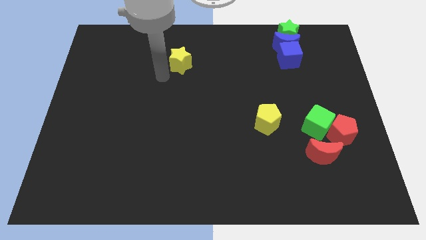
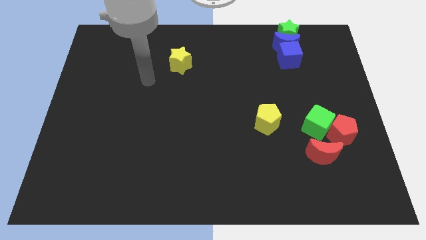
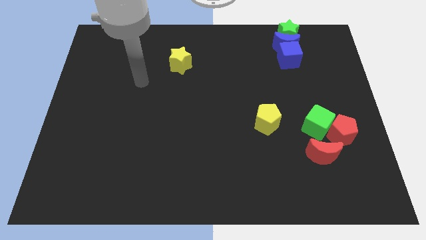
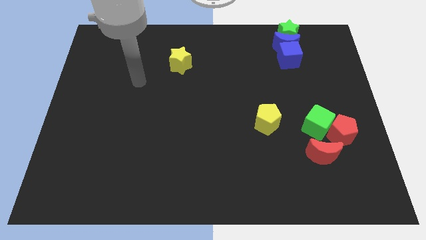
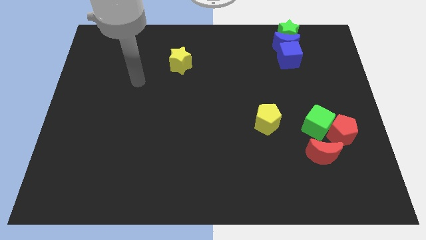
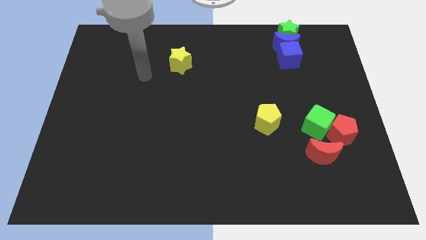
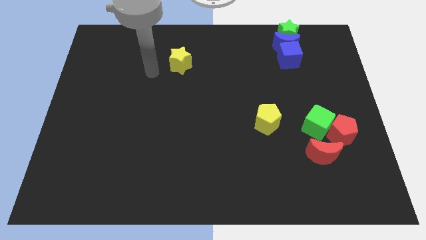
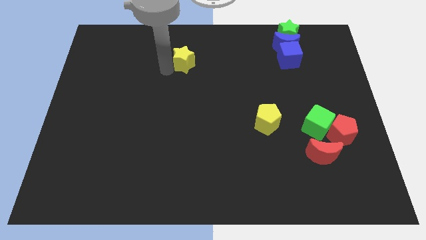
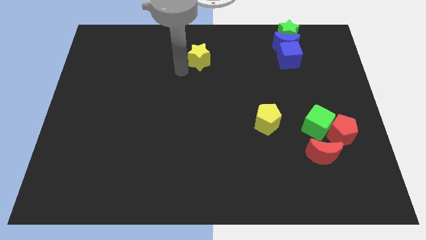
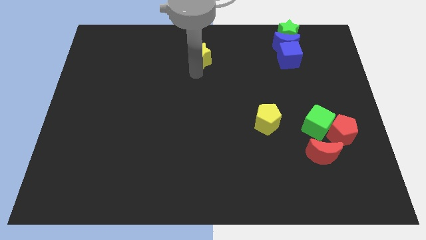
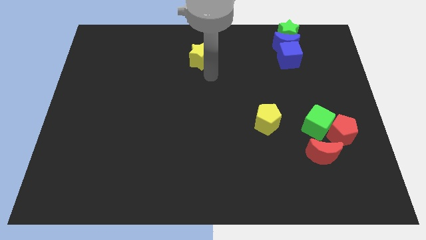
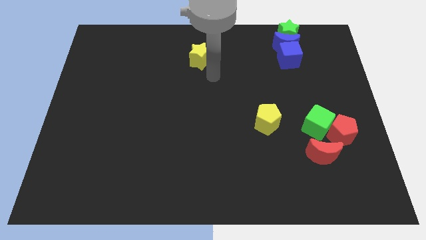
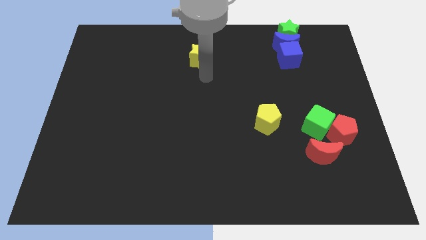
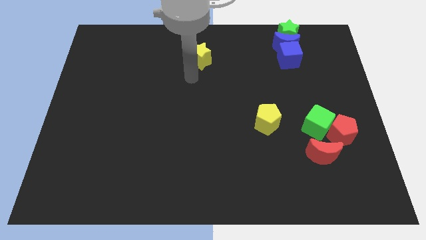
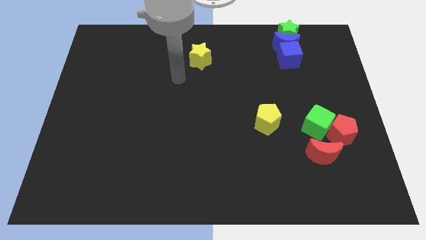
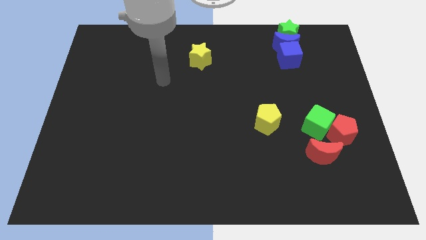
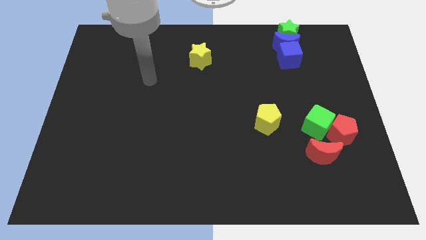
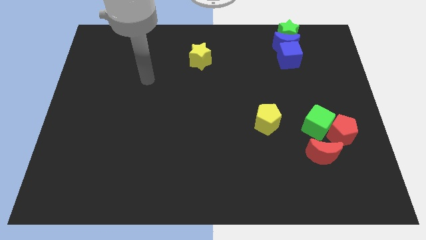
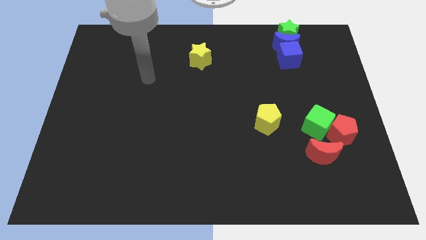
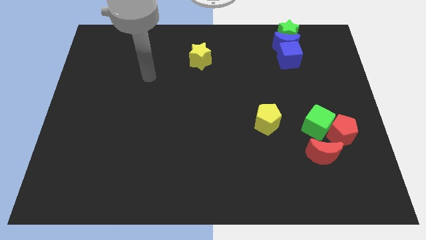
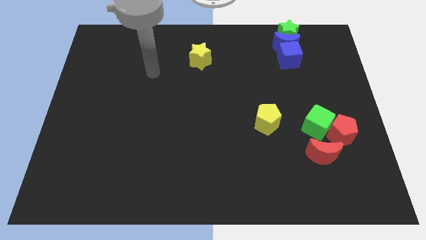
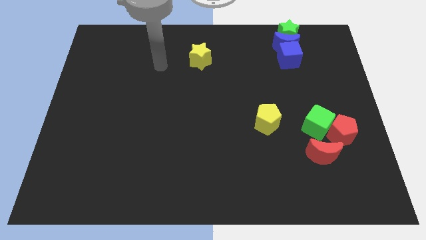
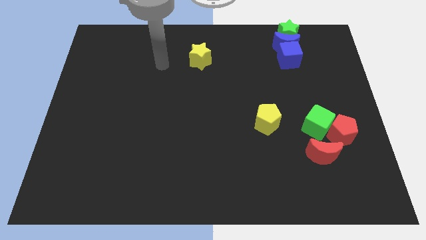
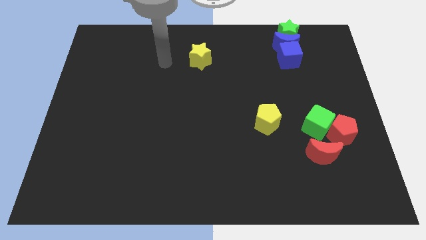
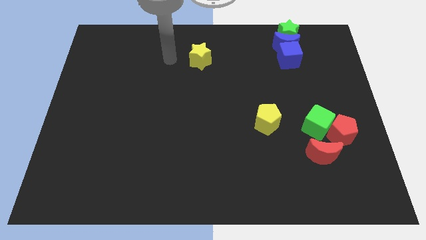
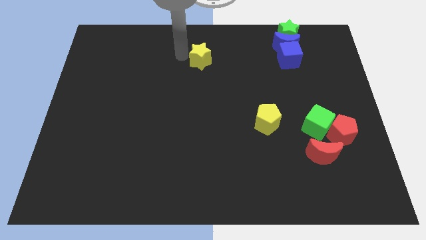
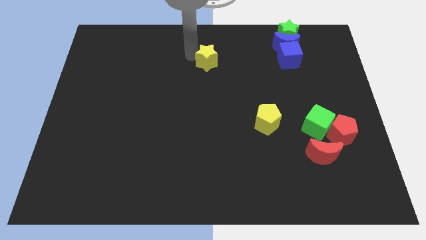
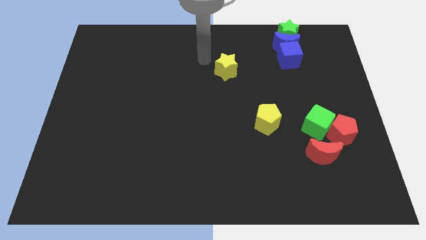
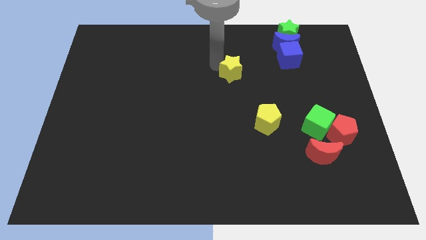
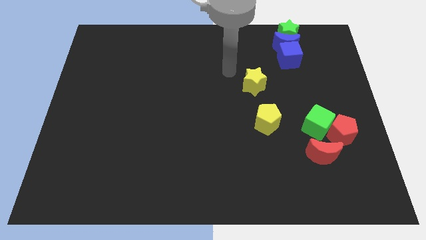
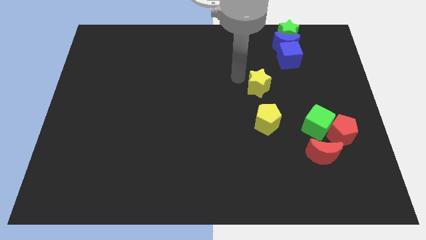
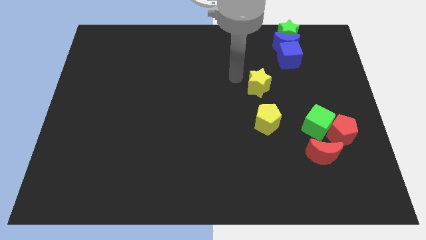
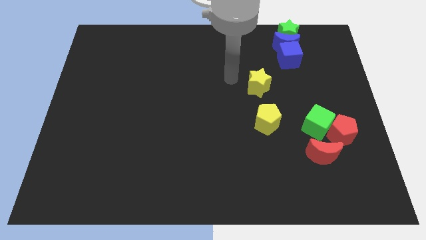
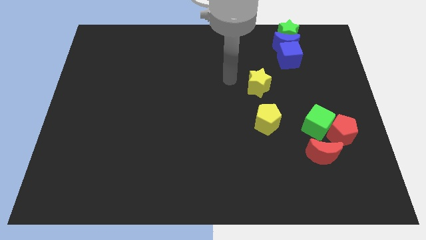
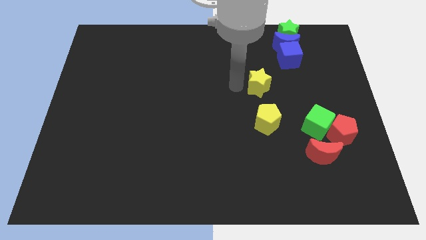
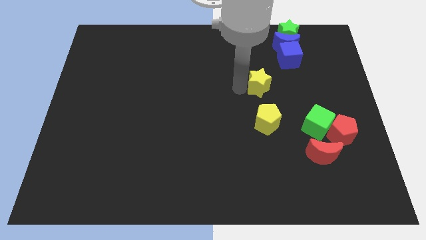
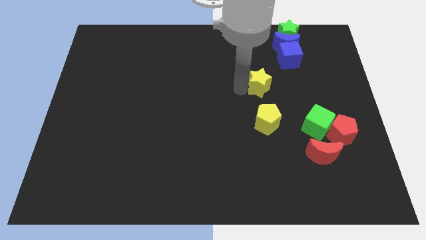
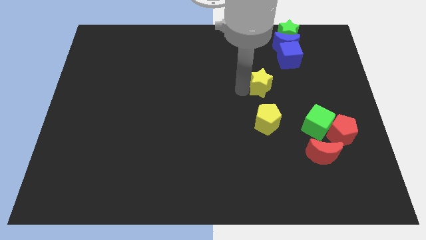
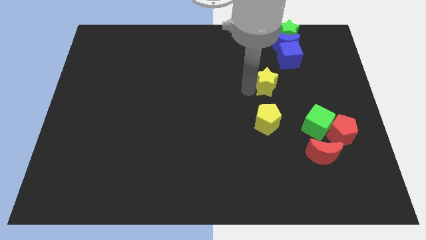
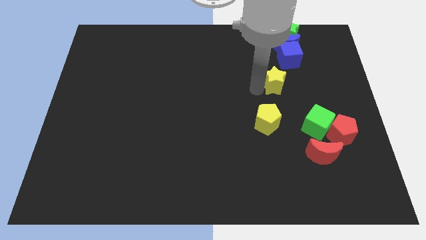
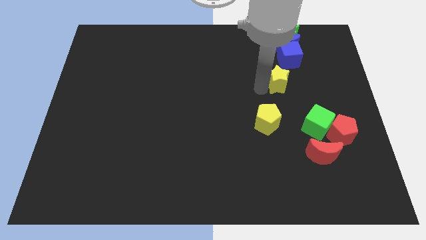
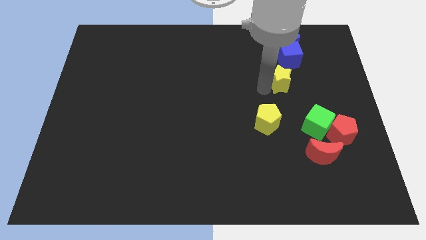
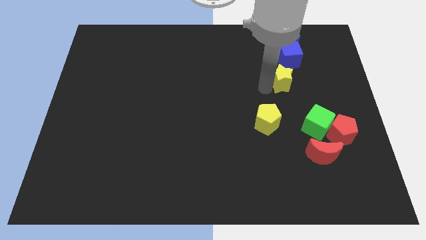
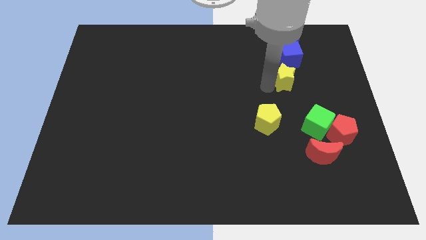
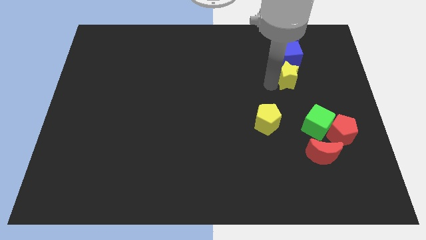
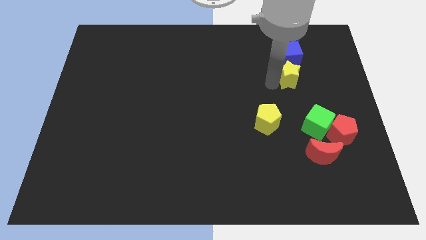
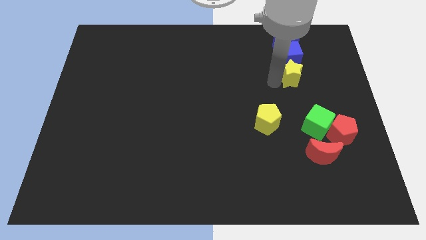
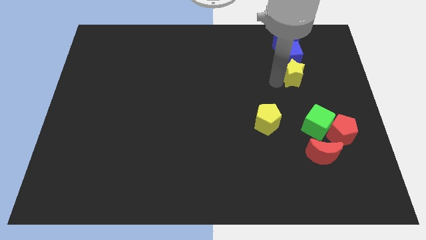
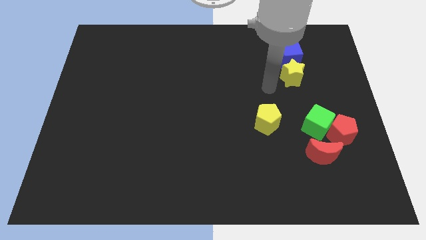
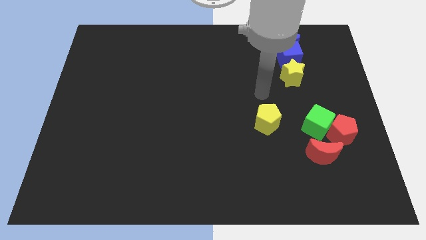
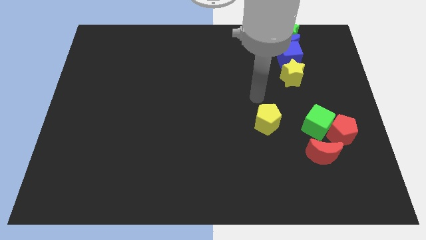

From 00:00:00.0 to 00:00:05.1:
move the yellow star bottom to the blue cube

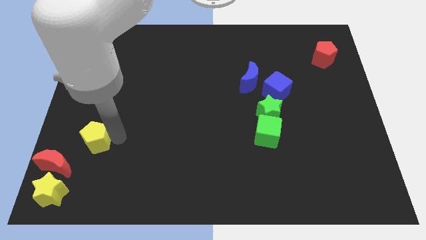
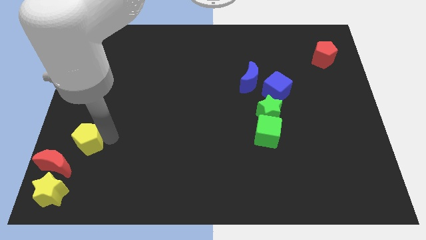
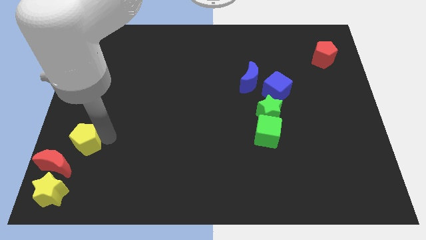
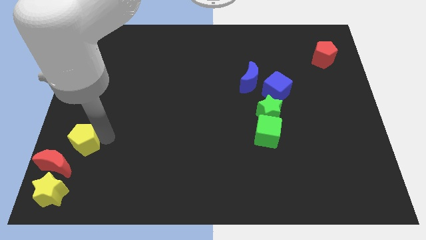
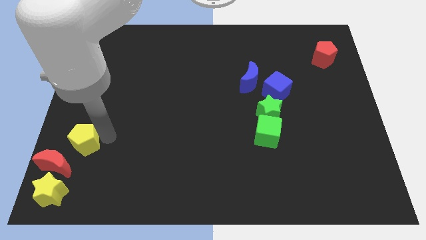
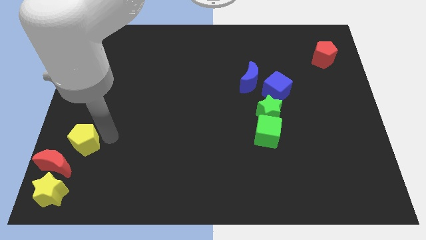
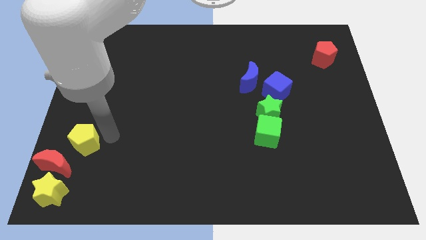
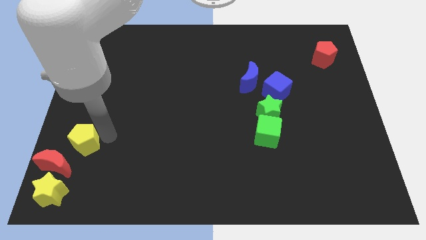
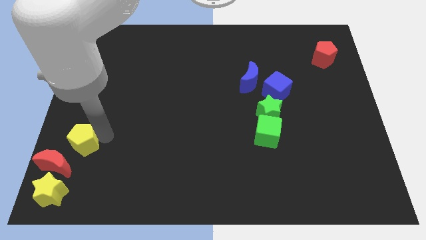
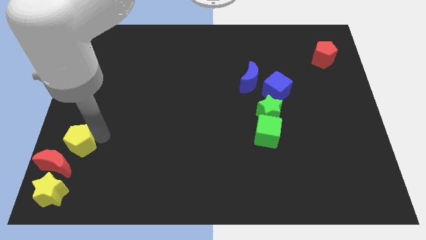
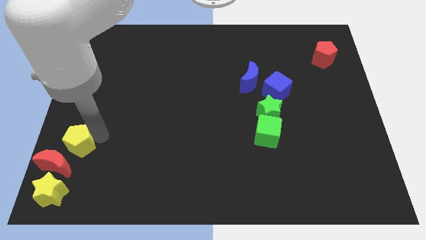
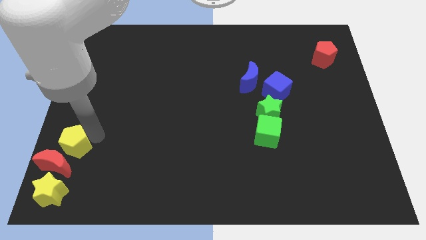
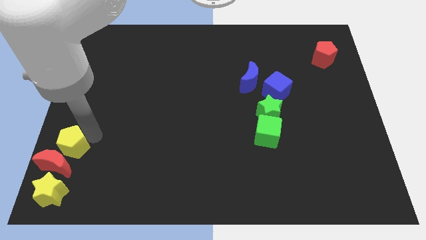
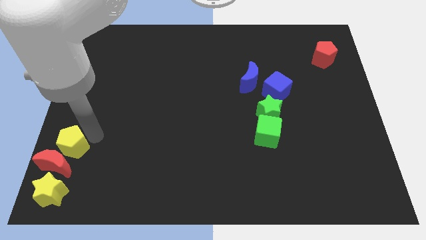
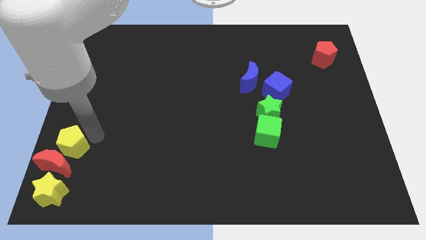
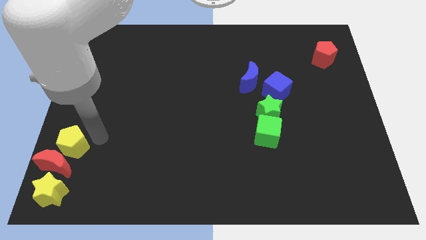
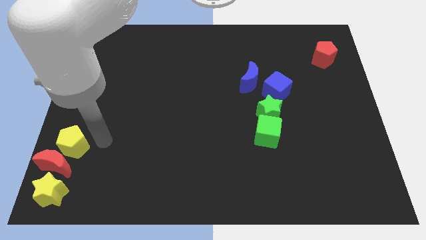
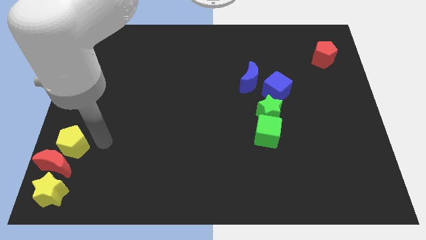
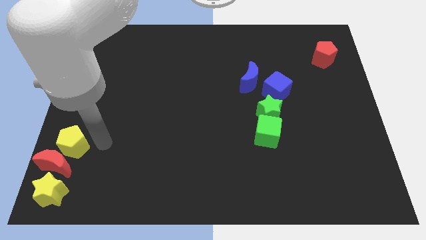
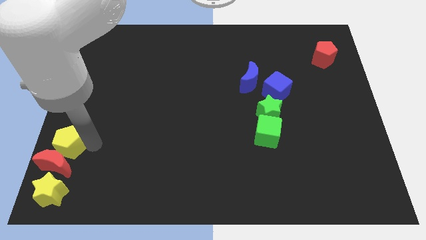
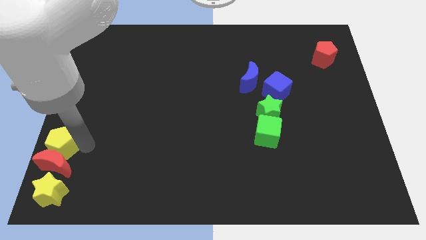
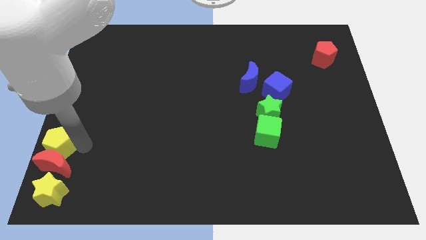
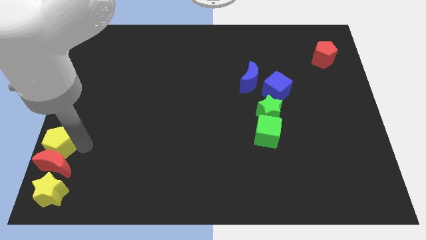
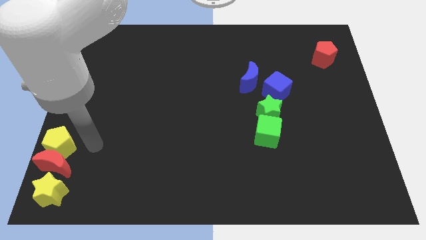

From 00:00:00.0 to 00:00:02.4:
place yellow pentagon above red crescent

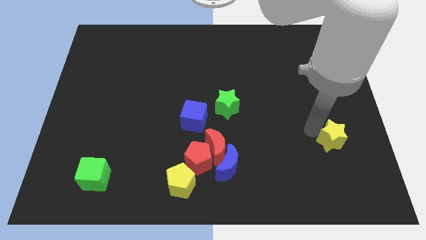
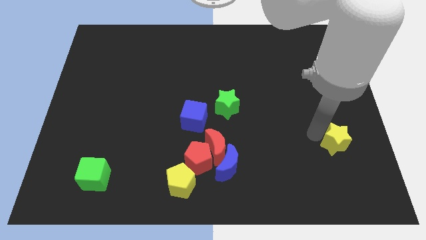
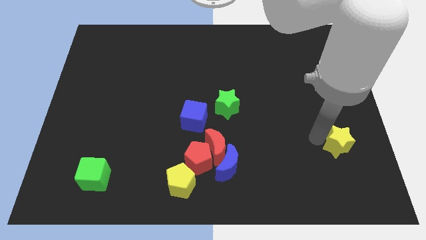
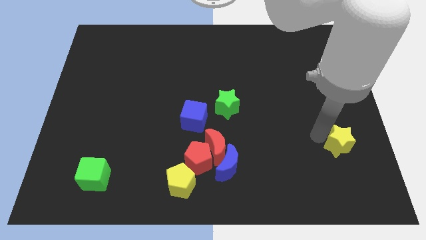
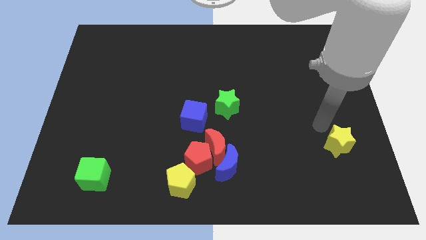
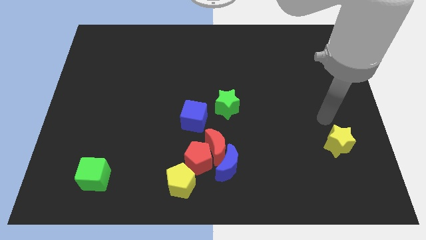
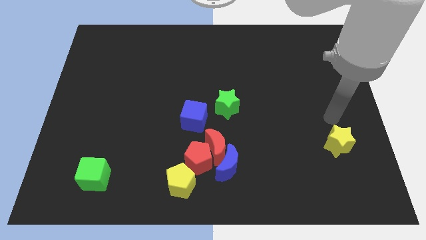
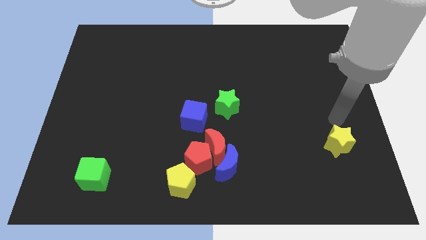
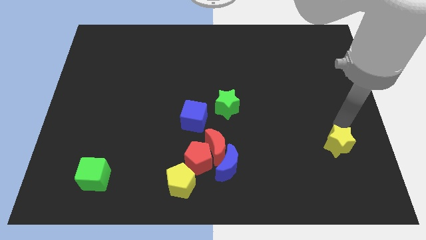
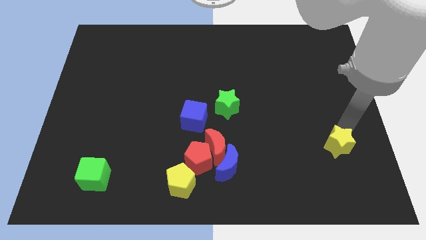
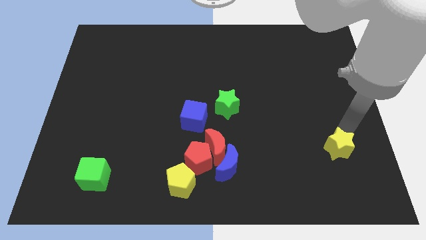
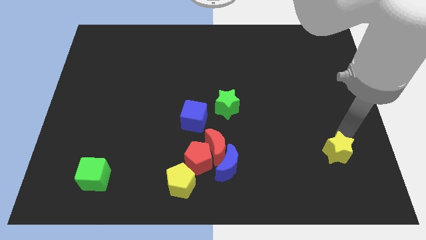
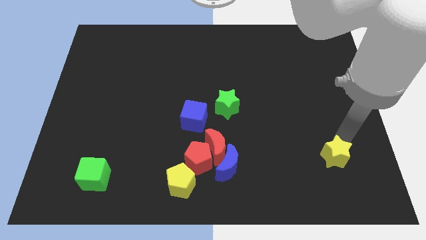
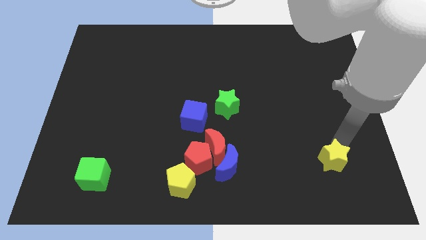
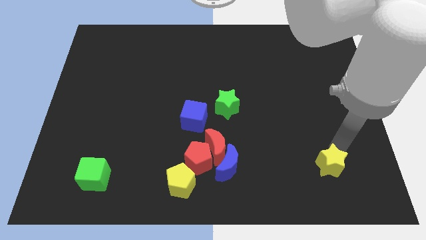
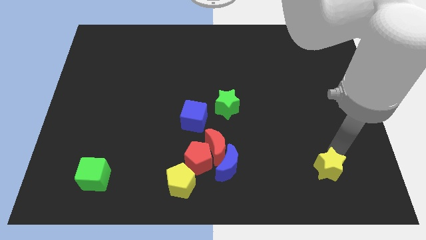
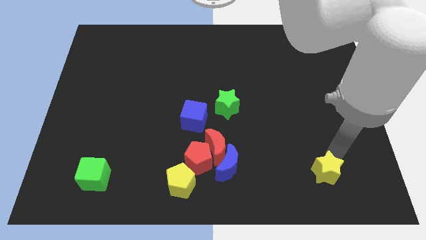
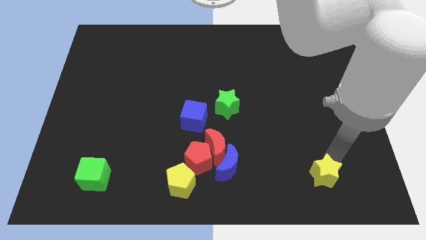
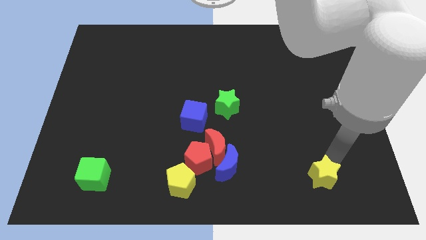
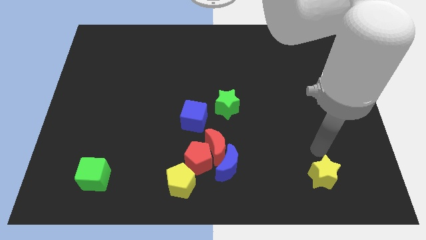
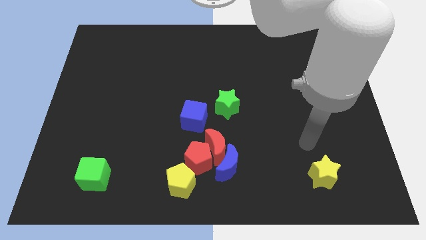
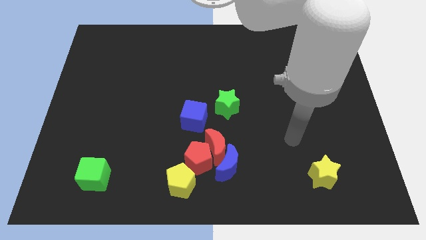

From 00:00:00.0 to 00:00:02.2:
place the yellow star horizontally to the right side of the yellow pentagon
